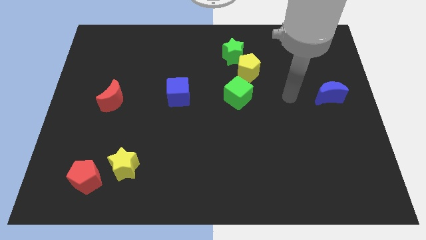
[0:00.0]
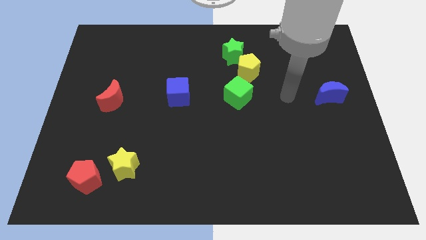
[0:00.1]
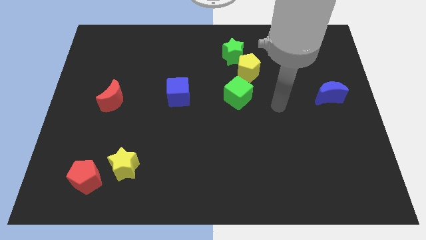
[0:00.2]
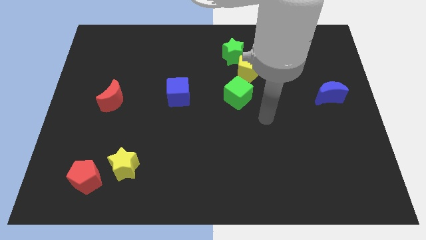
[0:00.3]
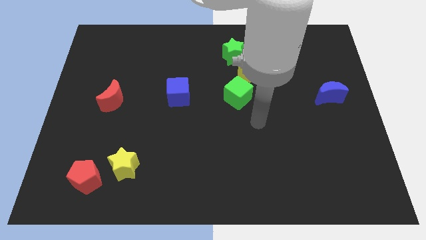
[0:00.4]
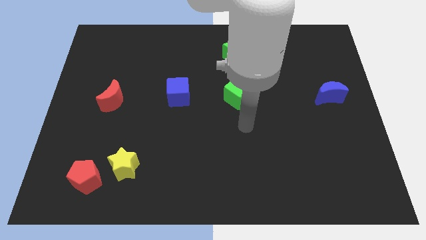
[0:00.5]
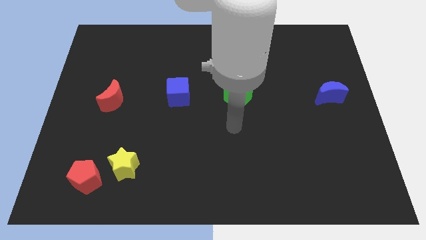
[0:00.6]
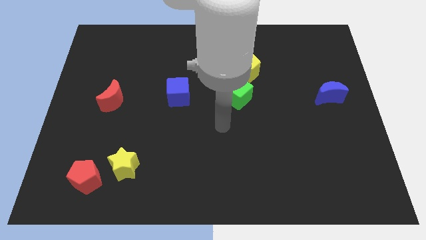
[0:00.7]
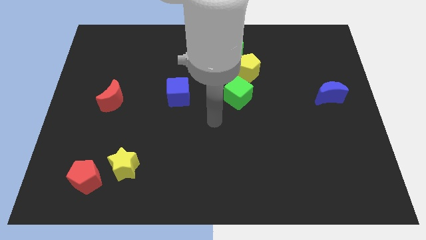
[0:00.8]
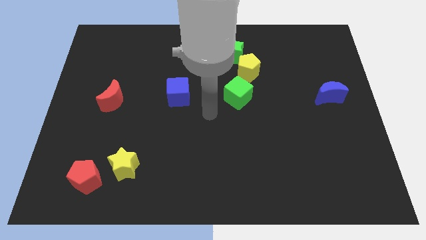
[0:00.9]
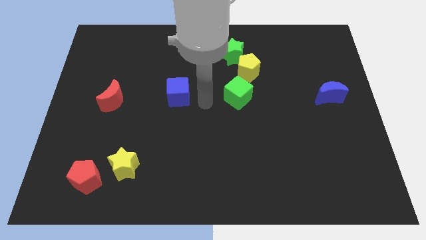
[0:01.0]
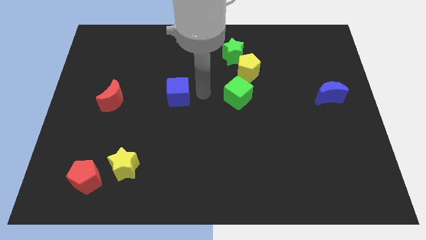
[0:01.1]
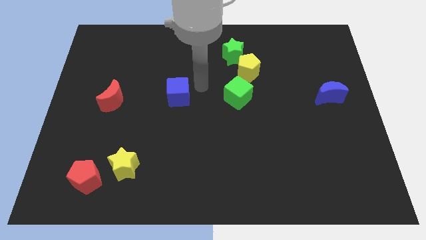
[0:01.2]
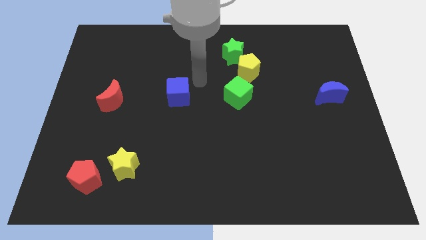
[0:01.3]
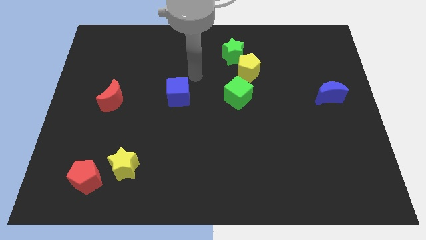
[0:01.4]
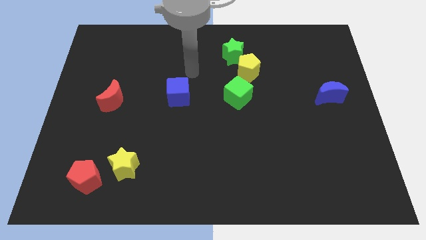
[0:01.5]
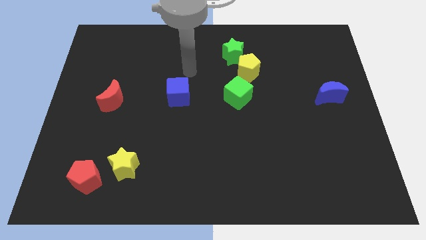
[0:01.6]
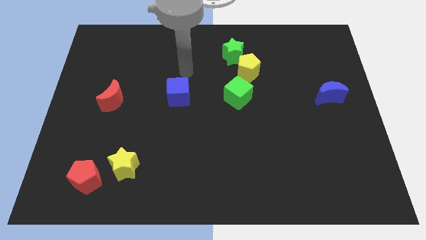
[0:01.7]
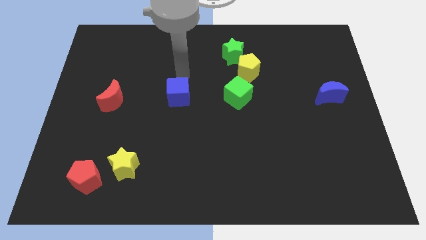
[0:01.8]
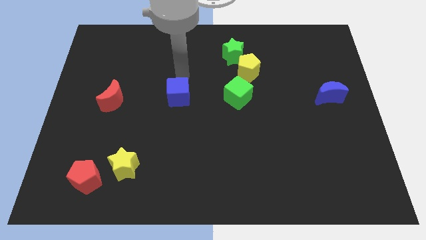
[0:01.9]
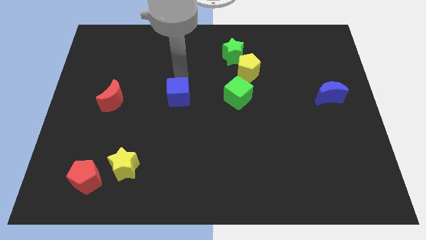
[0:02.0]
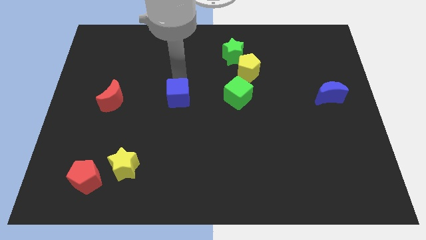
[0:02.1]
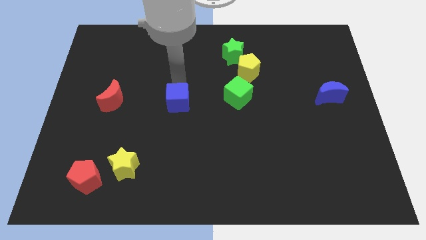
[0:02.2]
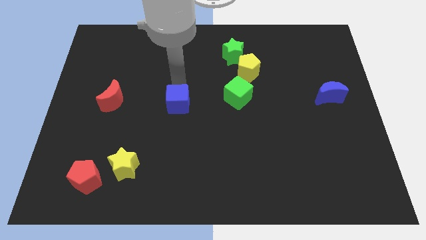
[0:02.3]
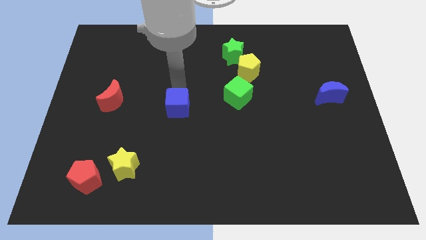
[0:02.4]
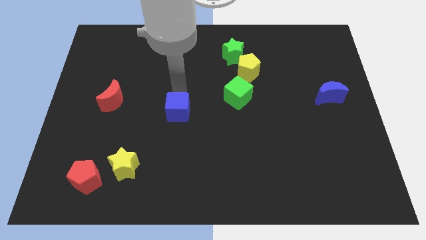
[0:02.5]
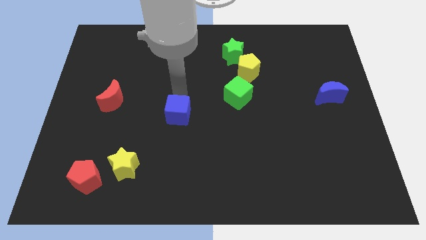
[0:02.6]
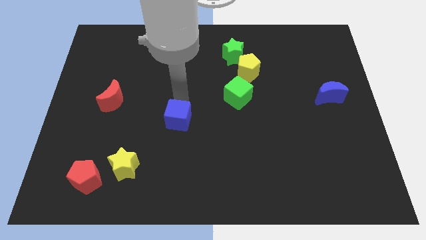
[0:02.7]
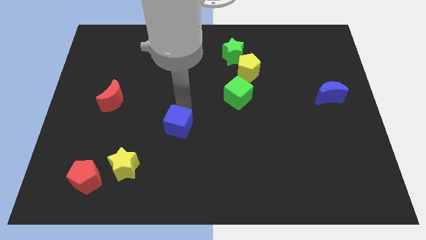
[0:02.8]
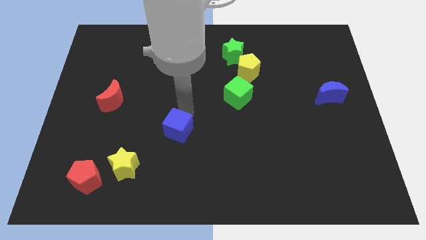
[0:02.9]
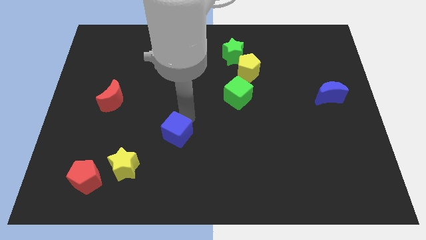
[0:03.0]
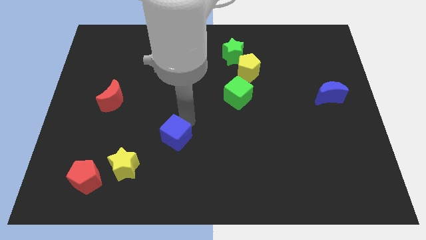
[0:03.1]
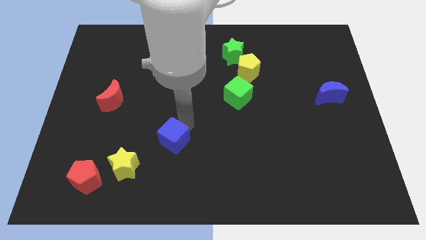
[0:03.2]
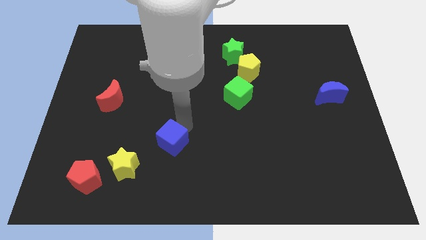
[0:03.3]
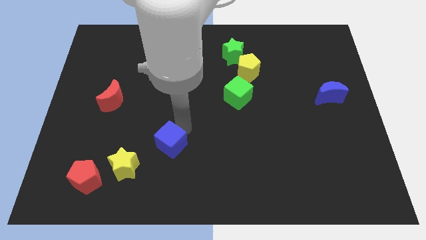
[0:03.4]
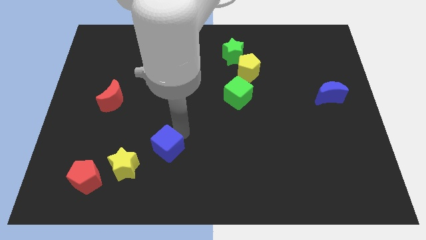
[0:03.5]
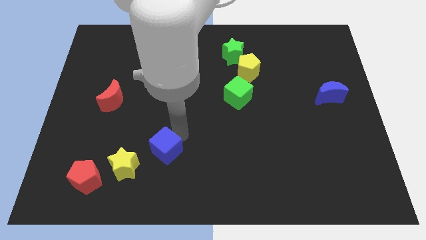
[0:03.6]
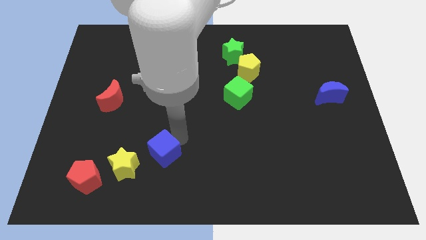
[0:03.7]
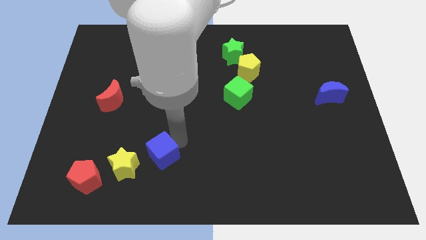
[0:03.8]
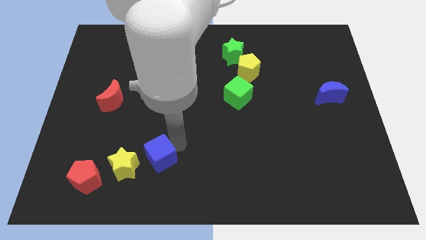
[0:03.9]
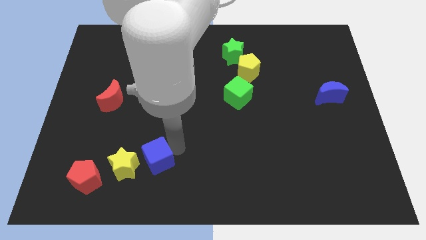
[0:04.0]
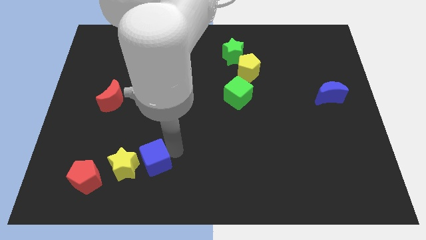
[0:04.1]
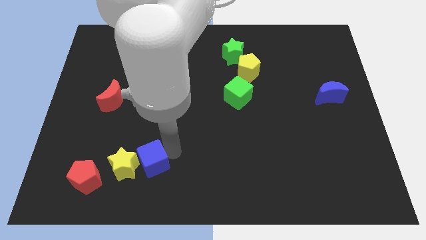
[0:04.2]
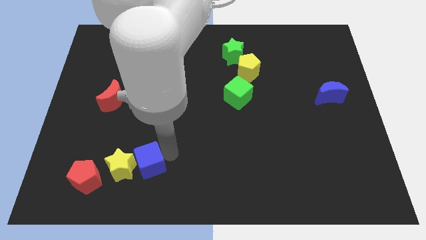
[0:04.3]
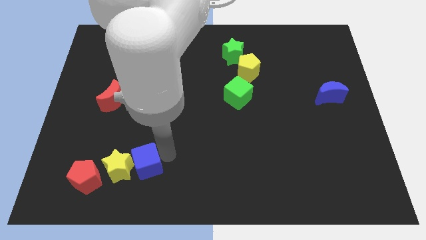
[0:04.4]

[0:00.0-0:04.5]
slide the blue cube to the yellow star

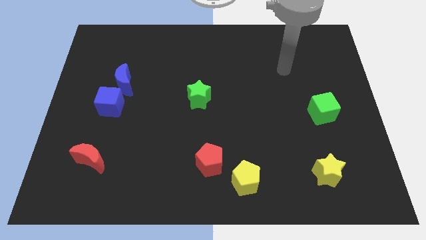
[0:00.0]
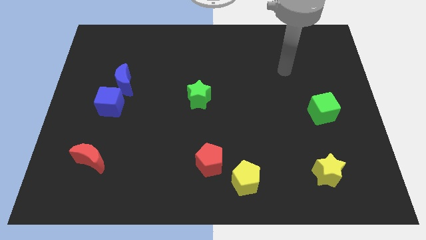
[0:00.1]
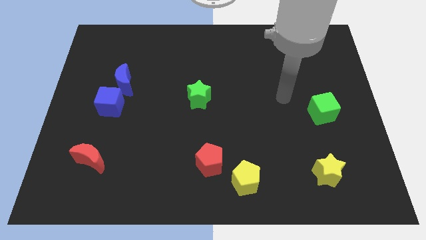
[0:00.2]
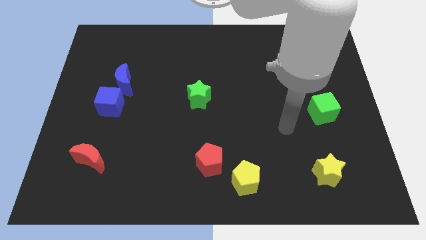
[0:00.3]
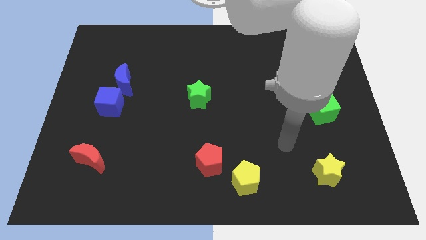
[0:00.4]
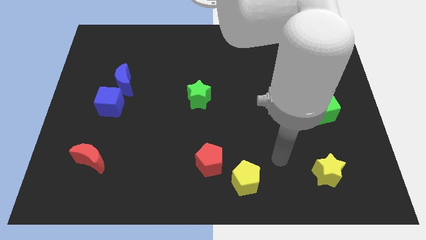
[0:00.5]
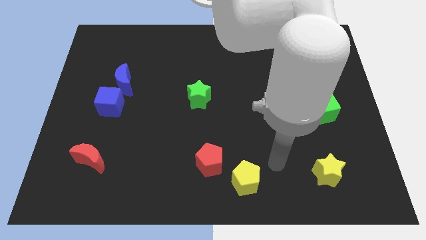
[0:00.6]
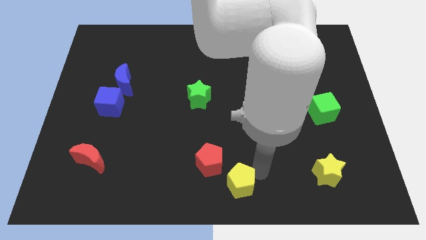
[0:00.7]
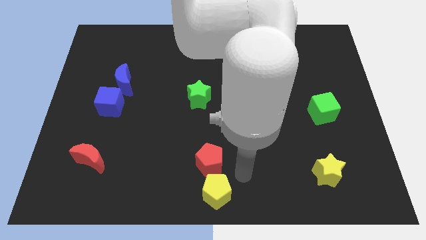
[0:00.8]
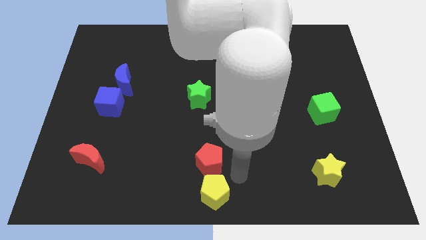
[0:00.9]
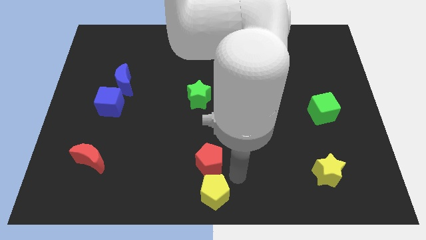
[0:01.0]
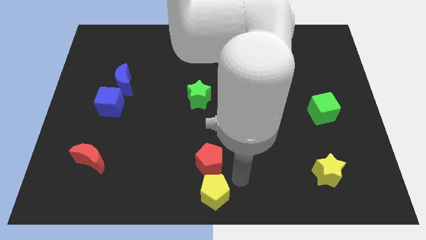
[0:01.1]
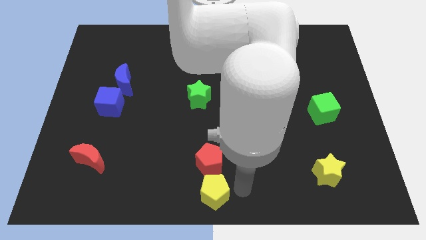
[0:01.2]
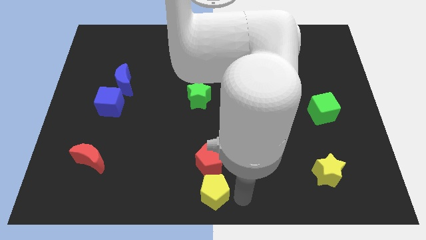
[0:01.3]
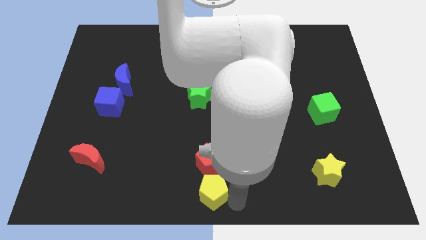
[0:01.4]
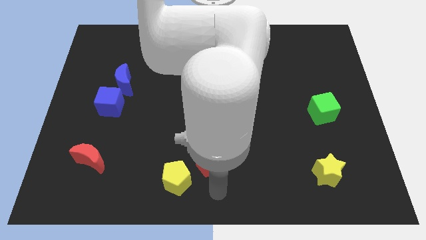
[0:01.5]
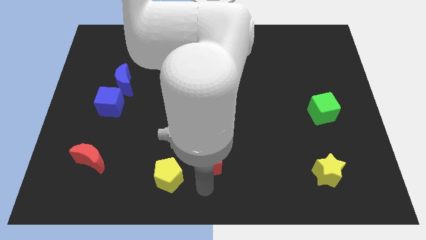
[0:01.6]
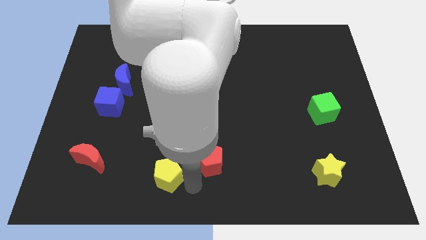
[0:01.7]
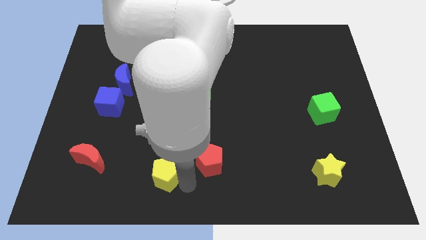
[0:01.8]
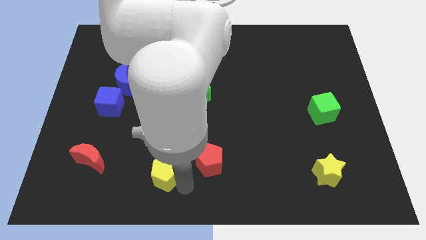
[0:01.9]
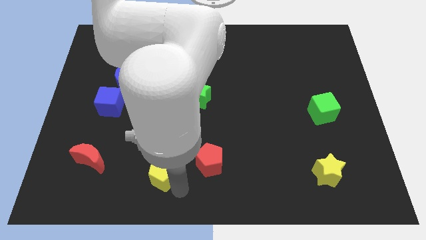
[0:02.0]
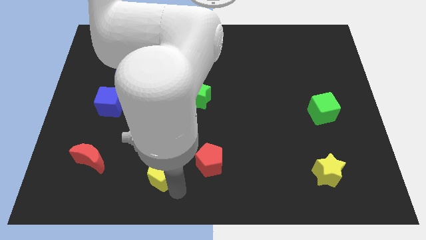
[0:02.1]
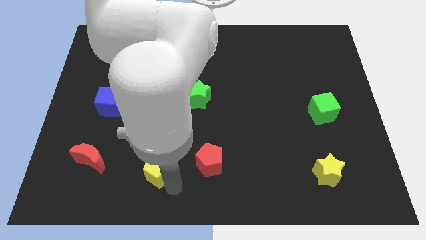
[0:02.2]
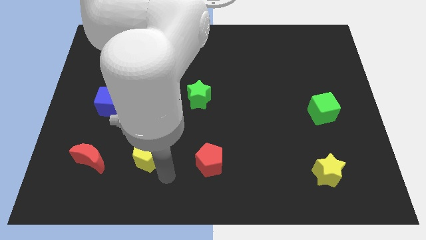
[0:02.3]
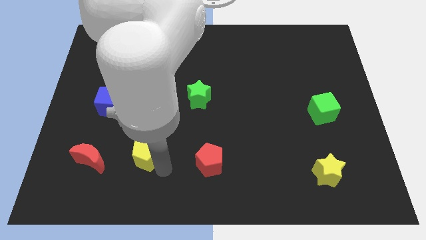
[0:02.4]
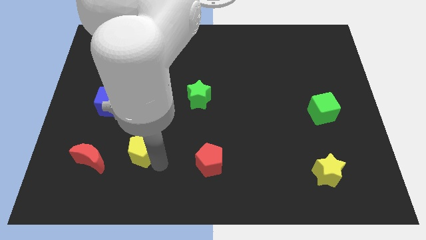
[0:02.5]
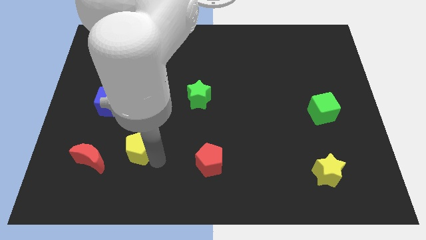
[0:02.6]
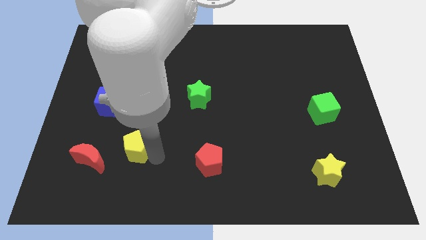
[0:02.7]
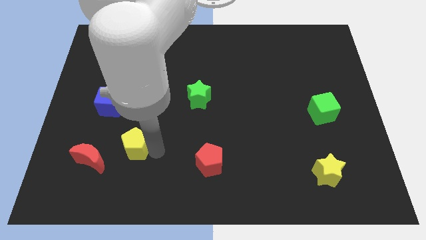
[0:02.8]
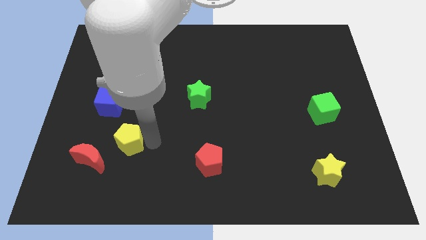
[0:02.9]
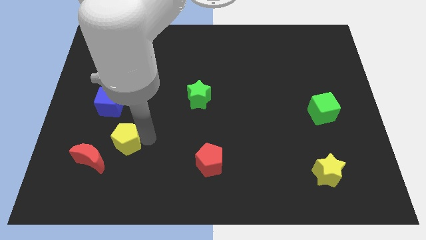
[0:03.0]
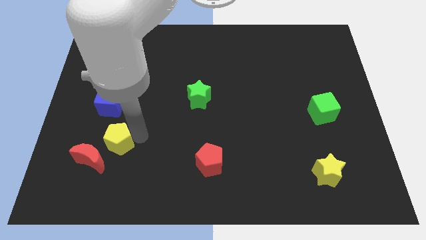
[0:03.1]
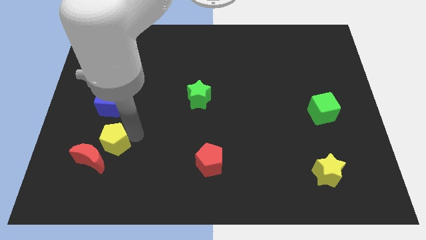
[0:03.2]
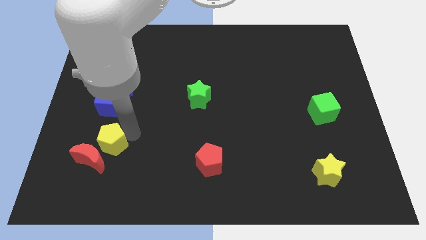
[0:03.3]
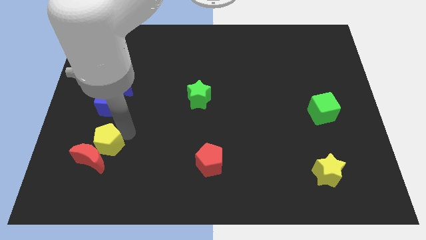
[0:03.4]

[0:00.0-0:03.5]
slide the yellow pentagon to the red moon
